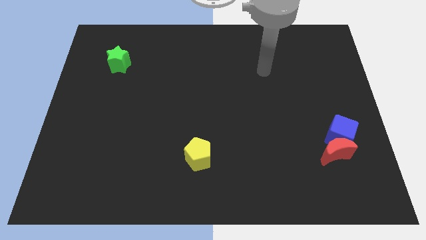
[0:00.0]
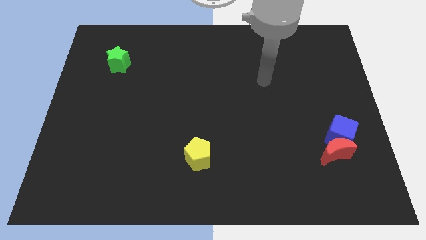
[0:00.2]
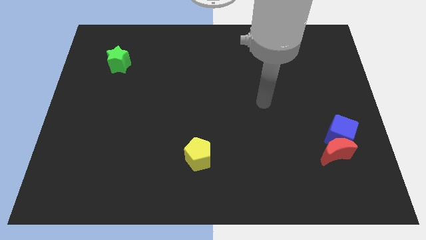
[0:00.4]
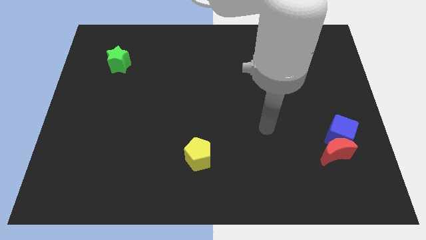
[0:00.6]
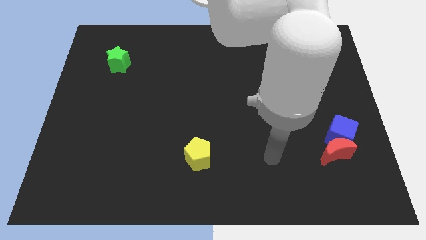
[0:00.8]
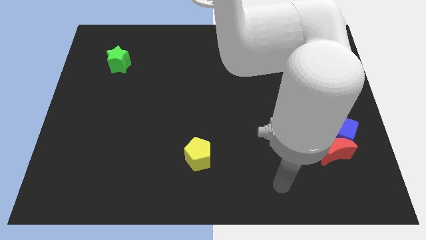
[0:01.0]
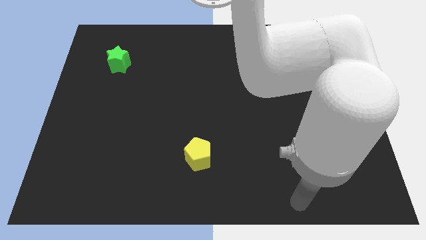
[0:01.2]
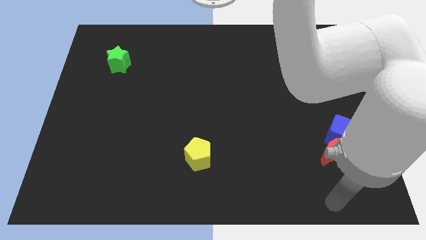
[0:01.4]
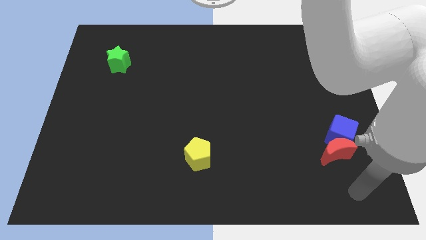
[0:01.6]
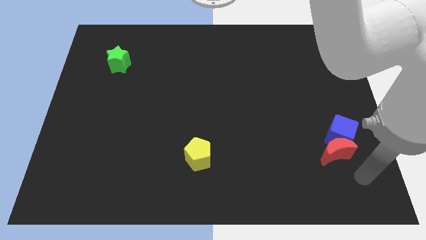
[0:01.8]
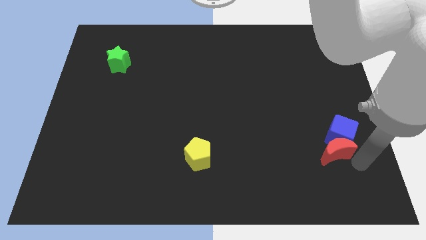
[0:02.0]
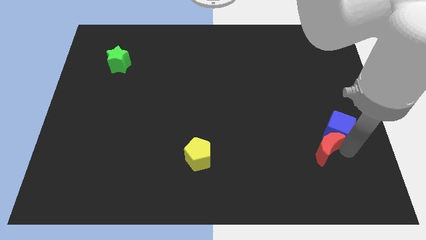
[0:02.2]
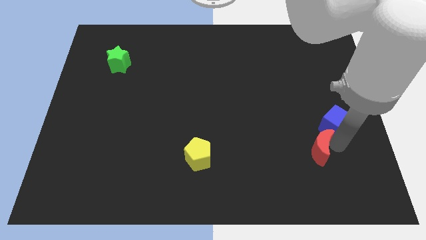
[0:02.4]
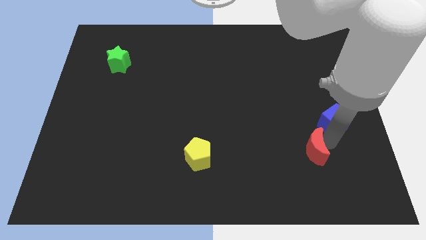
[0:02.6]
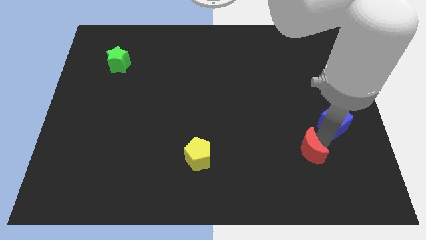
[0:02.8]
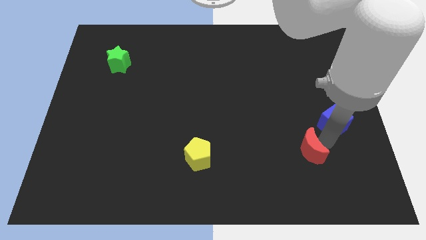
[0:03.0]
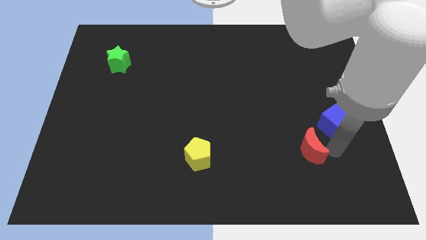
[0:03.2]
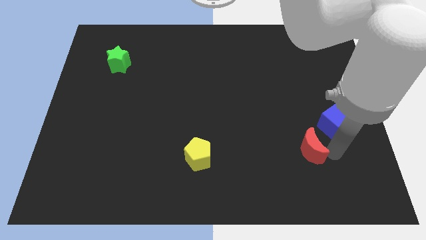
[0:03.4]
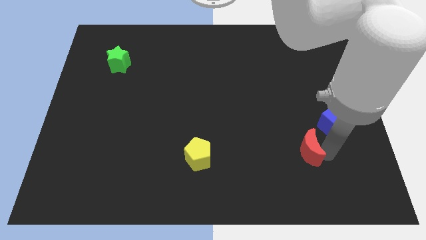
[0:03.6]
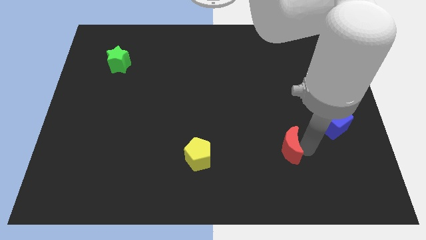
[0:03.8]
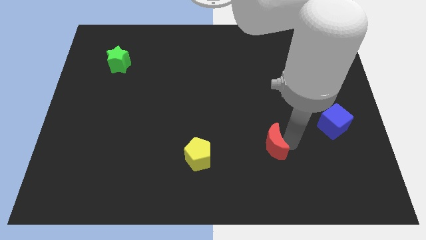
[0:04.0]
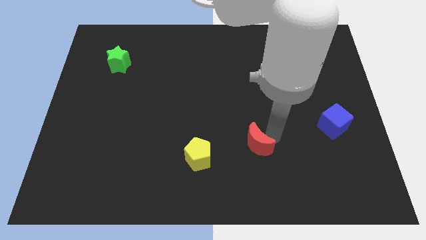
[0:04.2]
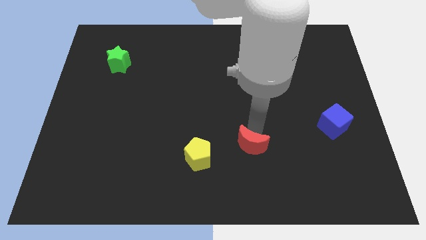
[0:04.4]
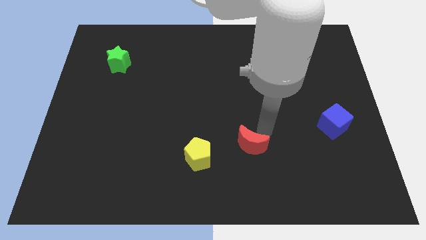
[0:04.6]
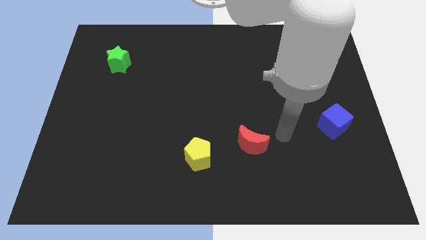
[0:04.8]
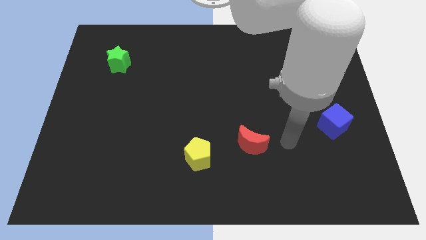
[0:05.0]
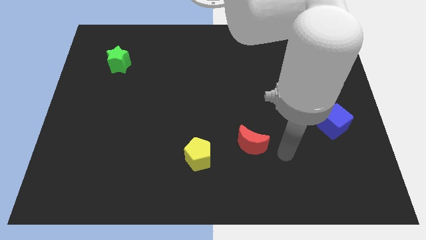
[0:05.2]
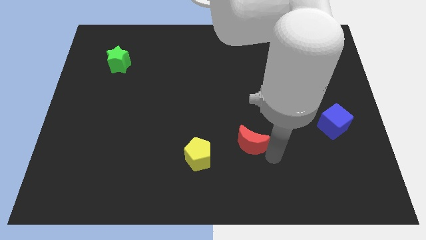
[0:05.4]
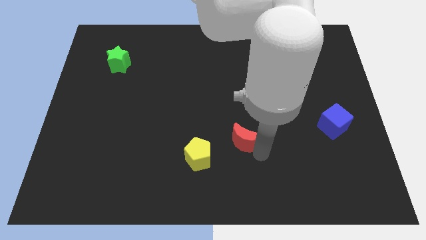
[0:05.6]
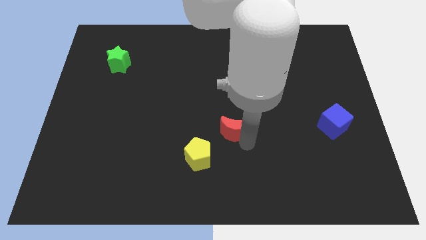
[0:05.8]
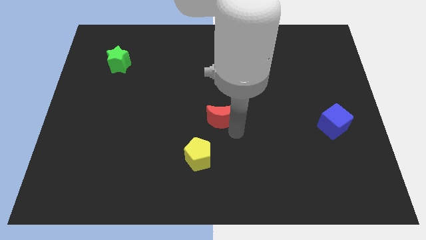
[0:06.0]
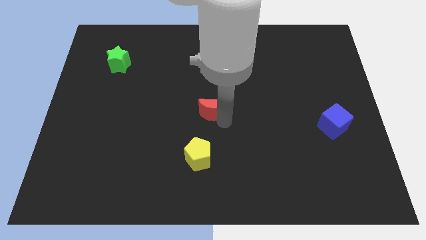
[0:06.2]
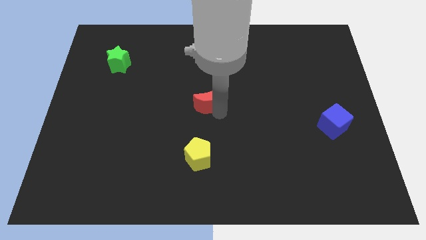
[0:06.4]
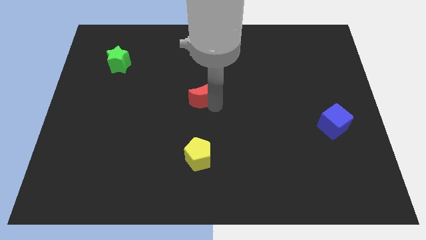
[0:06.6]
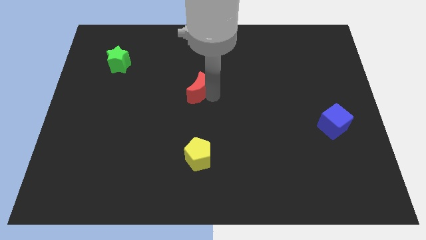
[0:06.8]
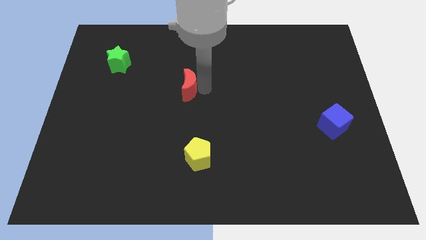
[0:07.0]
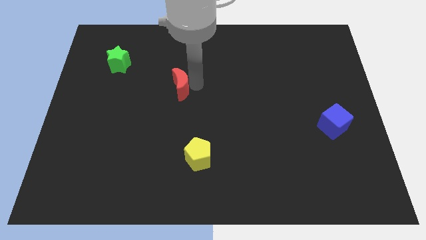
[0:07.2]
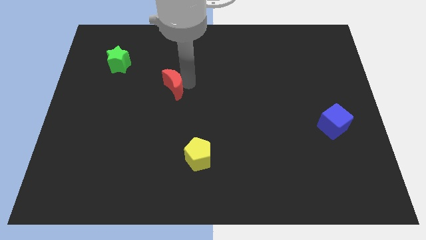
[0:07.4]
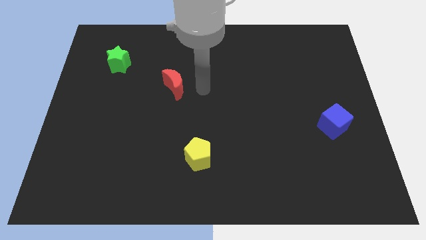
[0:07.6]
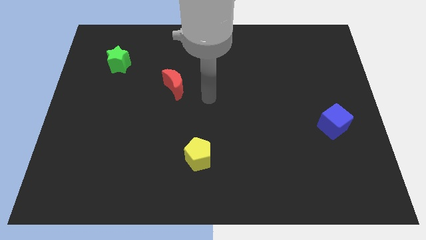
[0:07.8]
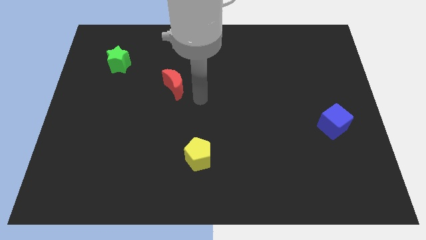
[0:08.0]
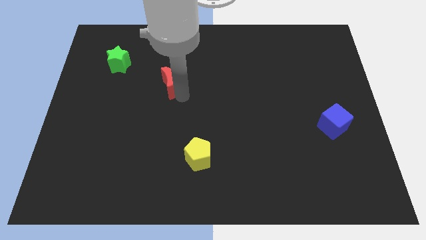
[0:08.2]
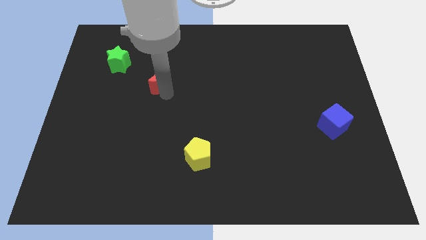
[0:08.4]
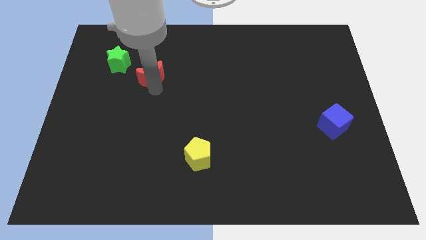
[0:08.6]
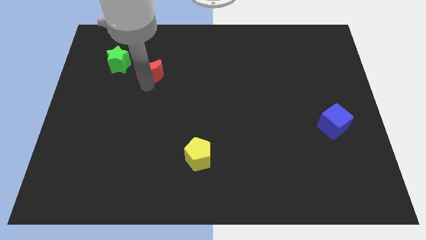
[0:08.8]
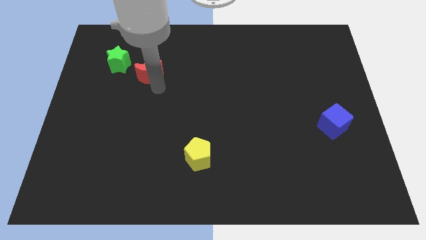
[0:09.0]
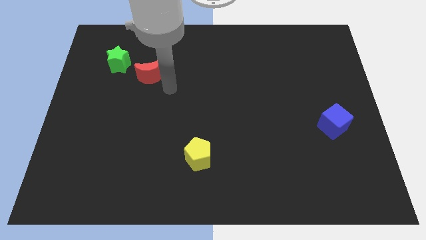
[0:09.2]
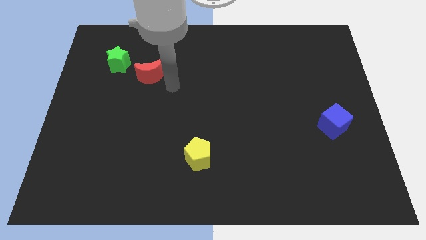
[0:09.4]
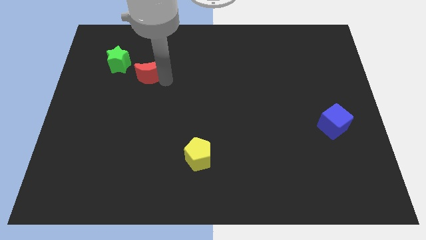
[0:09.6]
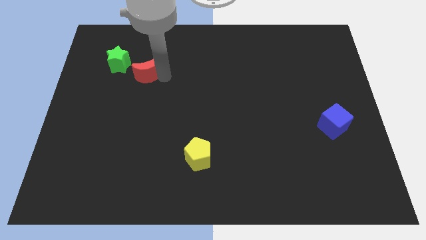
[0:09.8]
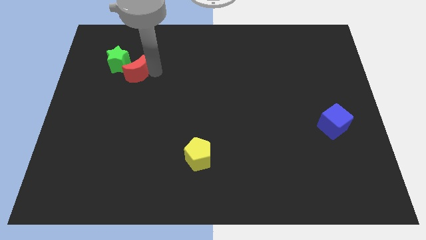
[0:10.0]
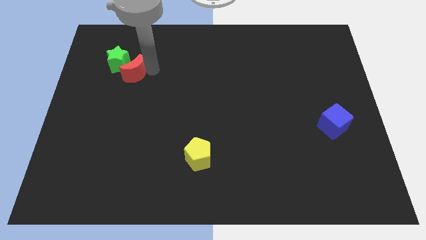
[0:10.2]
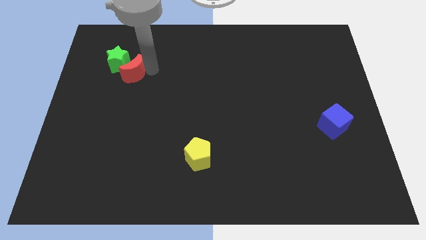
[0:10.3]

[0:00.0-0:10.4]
put the red block towards the green star

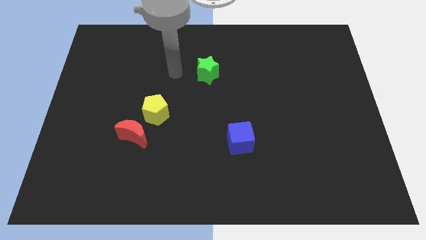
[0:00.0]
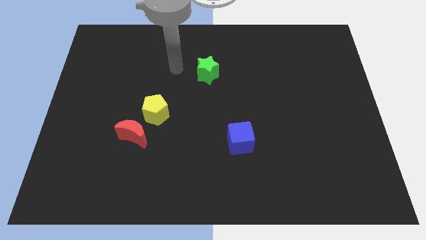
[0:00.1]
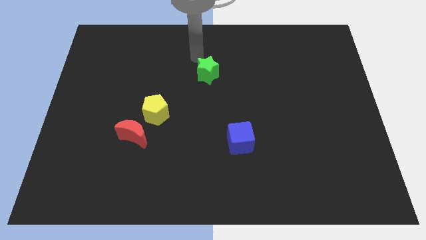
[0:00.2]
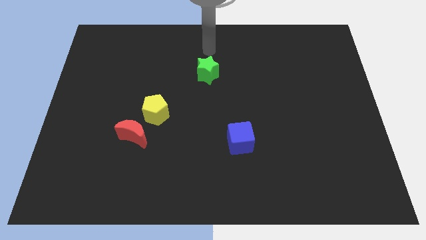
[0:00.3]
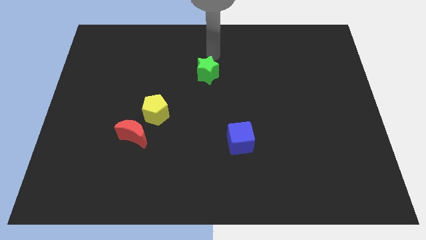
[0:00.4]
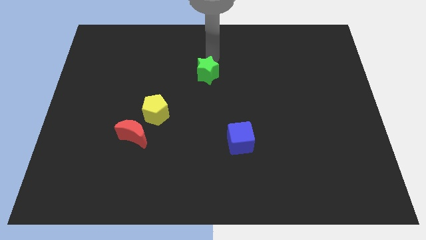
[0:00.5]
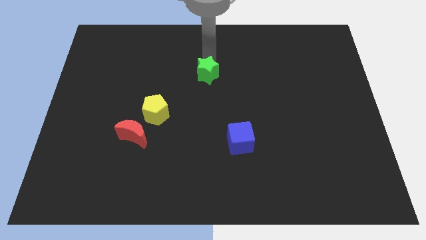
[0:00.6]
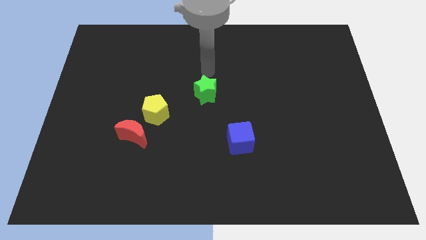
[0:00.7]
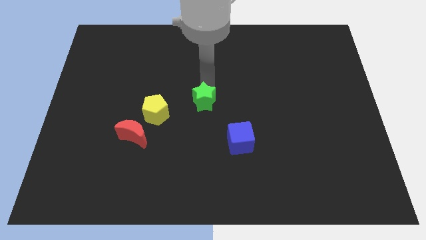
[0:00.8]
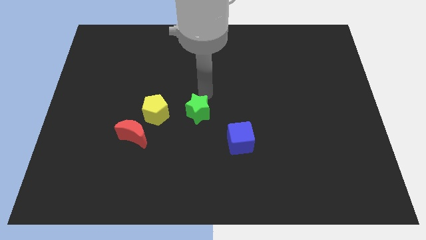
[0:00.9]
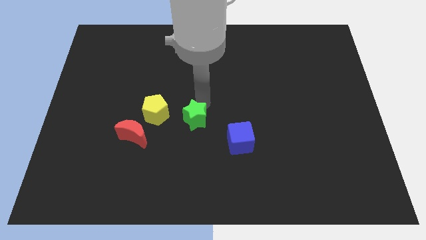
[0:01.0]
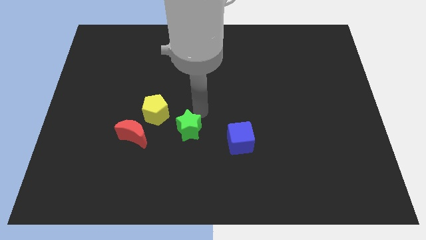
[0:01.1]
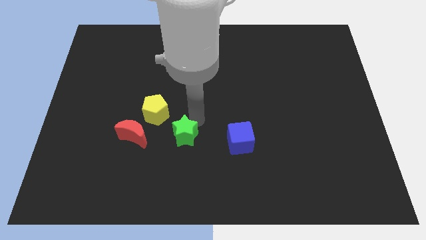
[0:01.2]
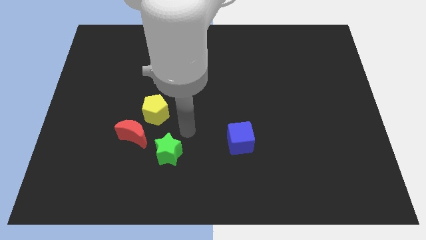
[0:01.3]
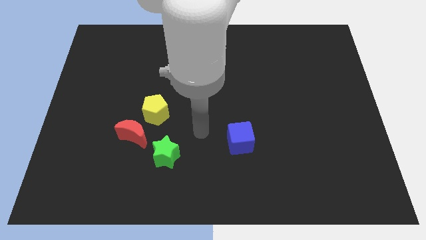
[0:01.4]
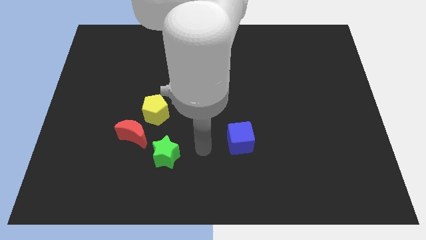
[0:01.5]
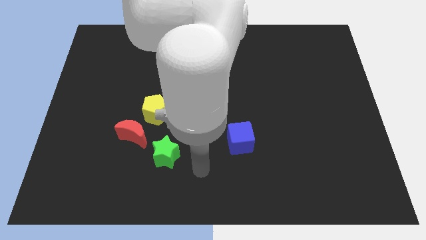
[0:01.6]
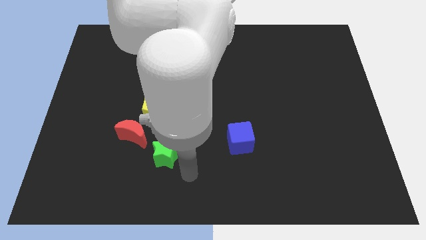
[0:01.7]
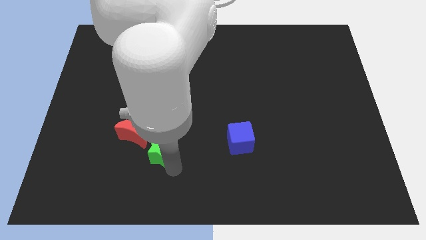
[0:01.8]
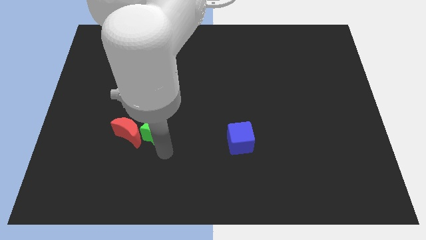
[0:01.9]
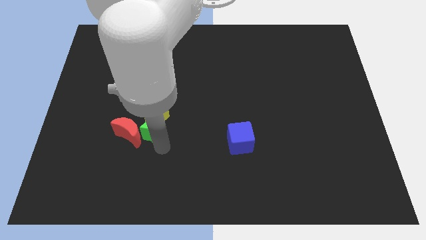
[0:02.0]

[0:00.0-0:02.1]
slide the star towards the moon

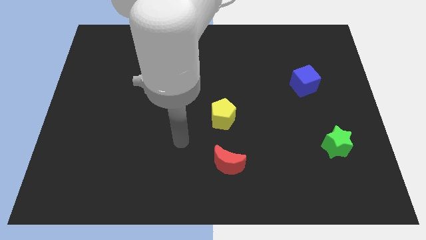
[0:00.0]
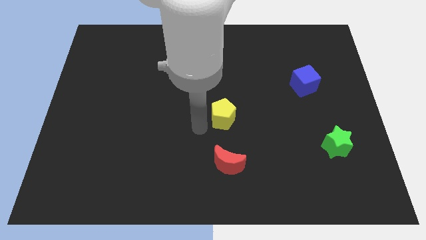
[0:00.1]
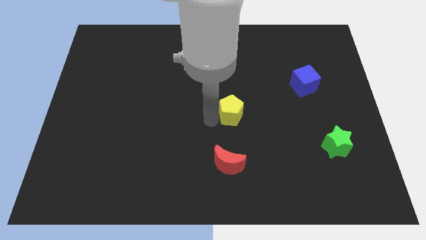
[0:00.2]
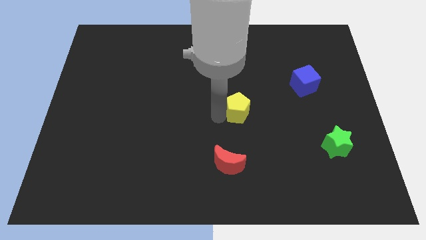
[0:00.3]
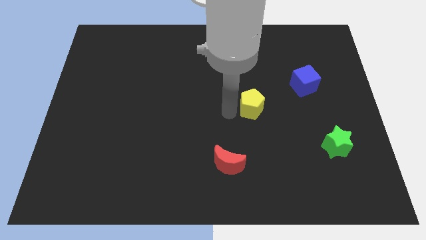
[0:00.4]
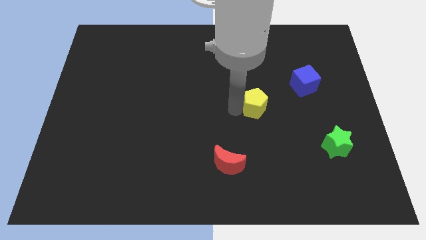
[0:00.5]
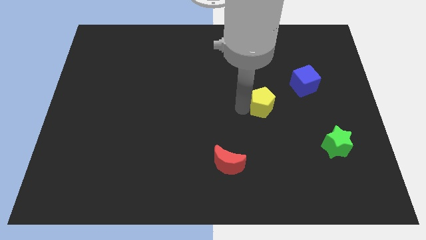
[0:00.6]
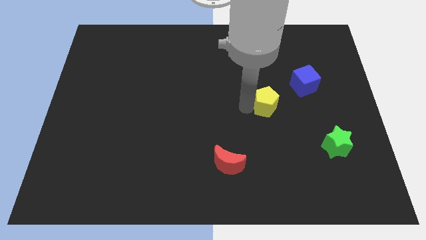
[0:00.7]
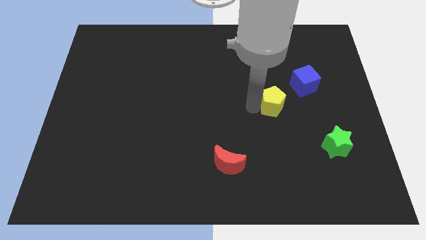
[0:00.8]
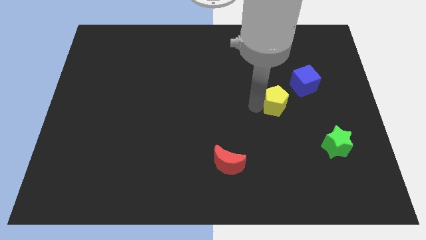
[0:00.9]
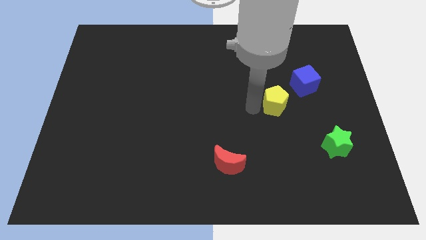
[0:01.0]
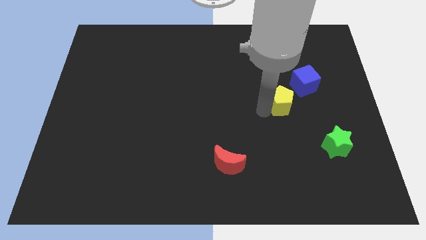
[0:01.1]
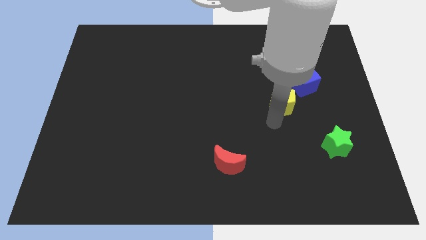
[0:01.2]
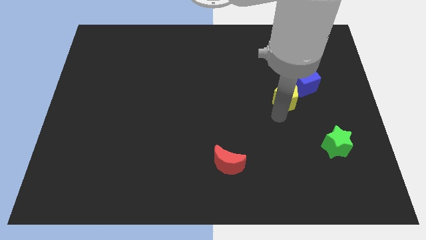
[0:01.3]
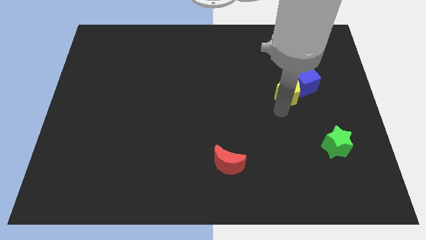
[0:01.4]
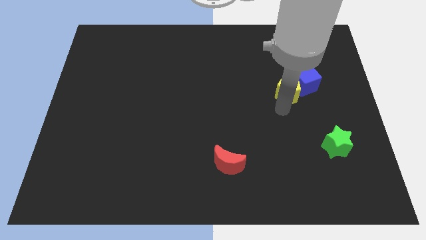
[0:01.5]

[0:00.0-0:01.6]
slide the yellow pentagon close to the blue cube
